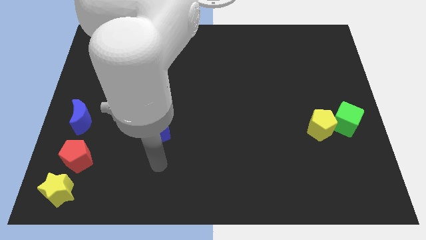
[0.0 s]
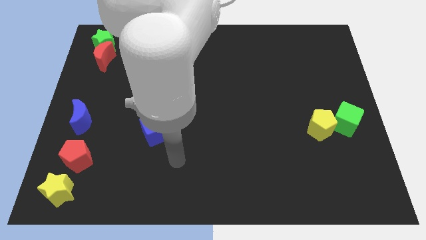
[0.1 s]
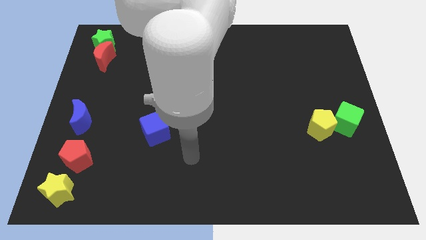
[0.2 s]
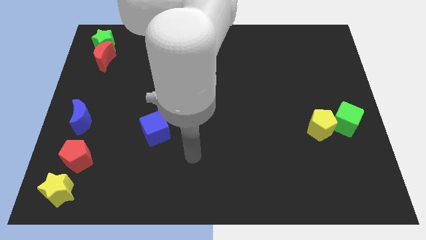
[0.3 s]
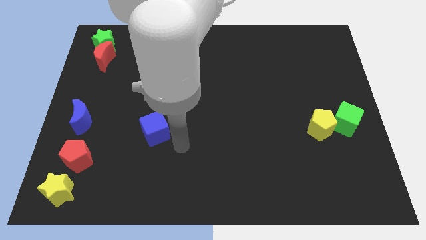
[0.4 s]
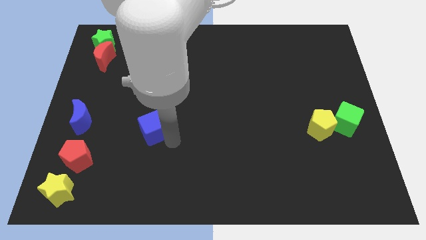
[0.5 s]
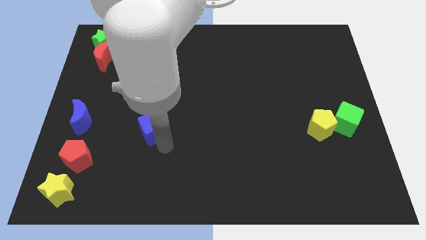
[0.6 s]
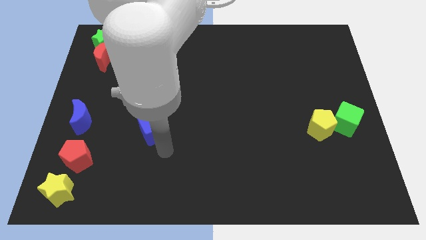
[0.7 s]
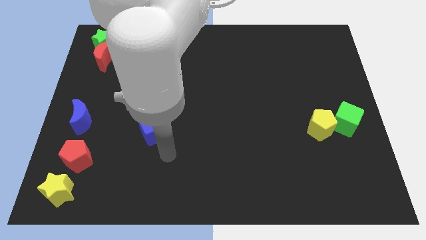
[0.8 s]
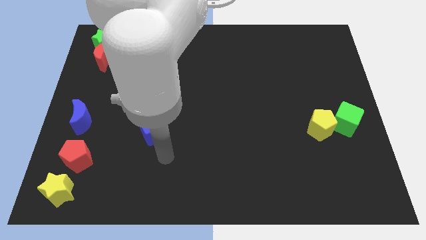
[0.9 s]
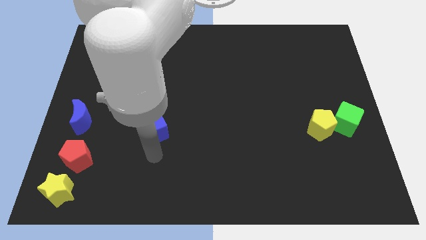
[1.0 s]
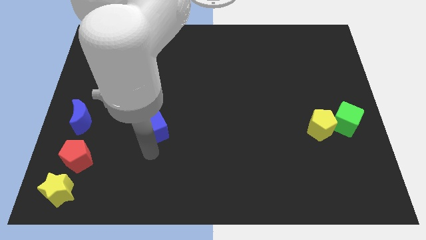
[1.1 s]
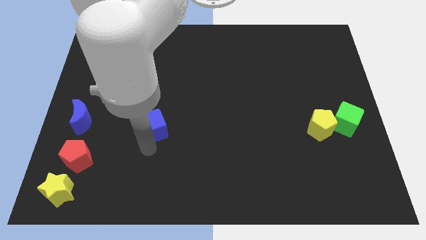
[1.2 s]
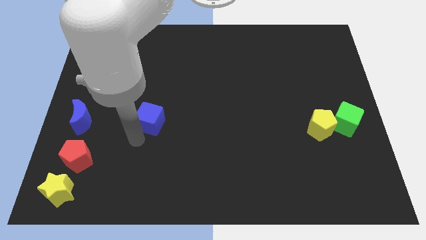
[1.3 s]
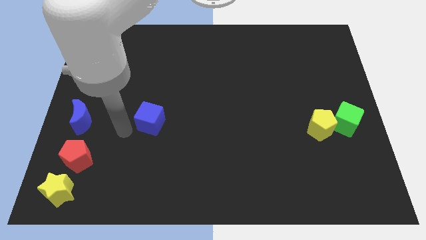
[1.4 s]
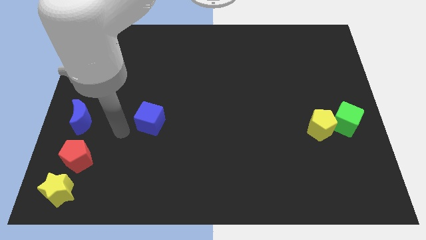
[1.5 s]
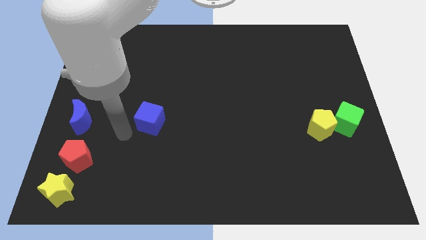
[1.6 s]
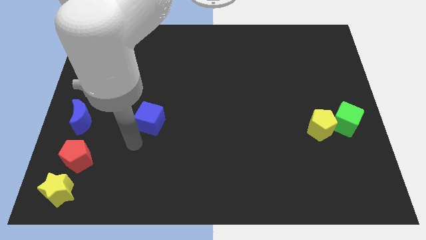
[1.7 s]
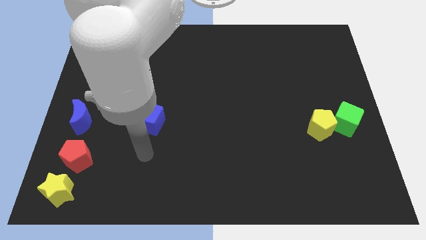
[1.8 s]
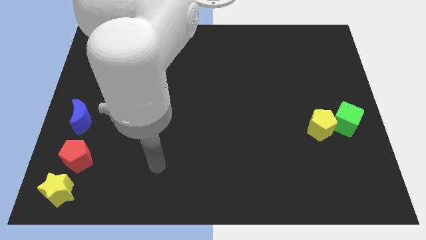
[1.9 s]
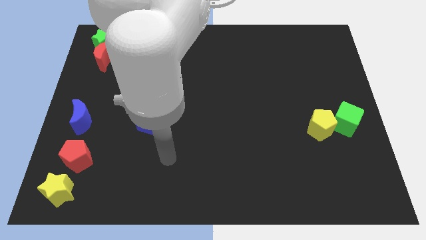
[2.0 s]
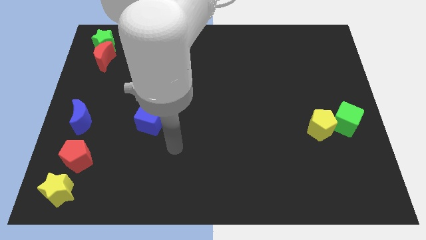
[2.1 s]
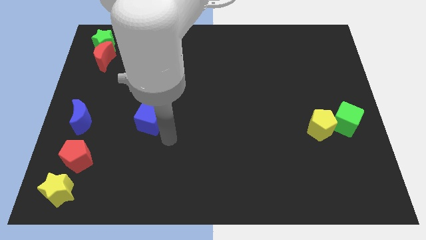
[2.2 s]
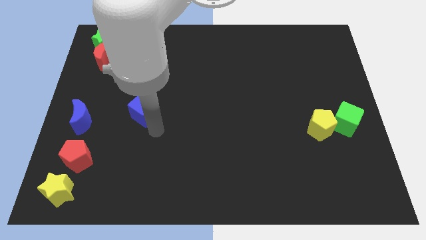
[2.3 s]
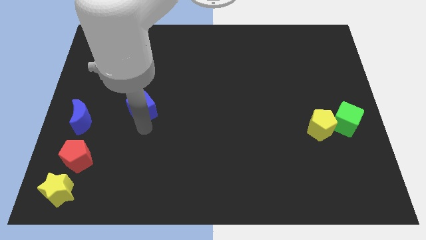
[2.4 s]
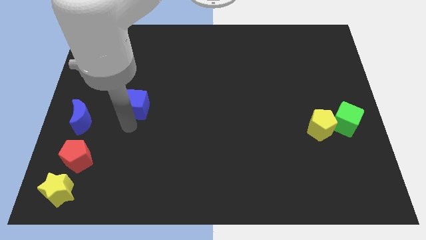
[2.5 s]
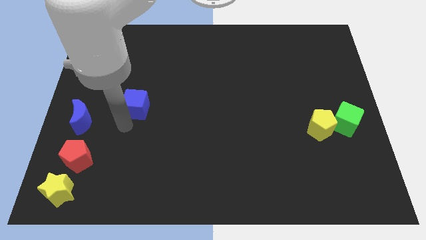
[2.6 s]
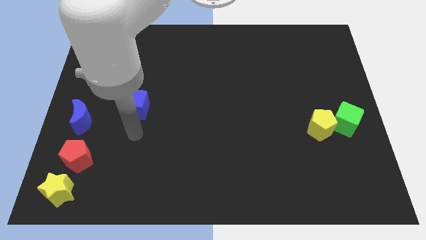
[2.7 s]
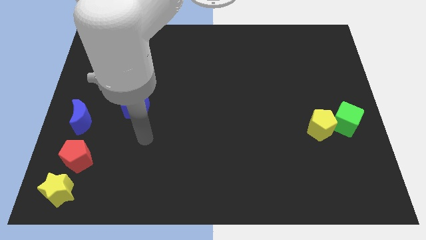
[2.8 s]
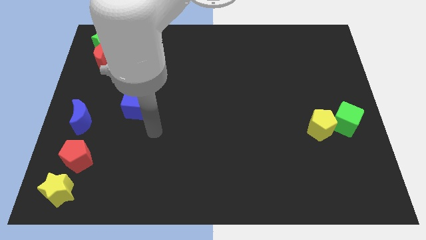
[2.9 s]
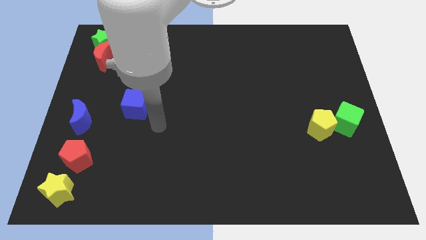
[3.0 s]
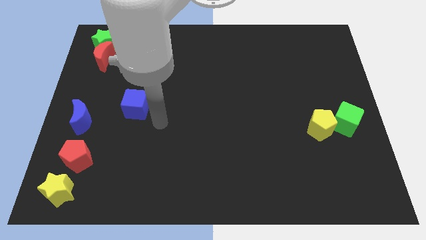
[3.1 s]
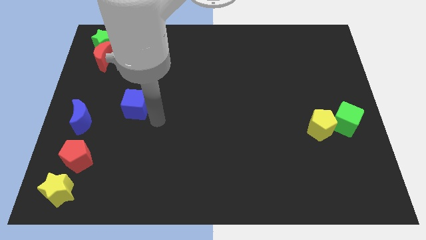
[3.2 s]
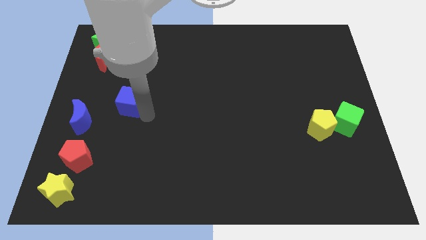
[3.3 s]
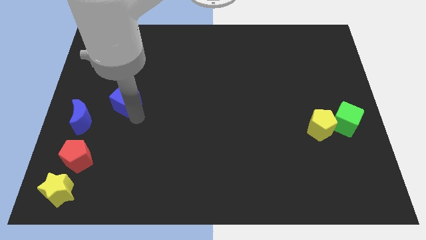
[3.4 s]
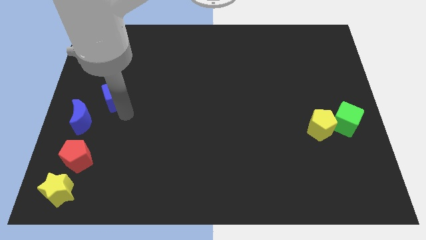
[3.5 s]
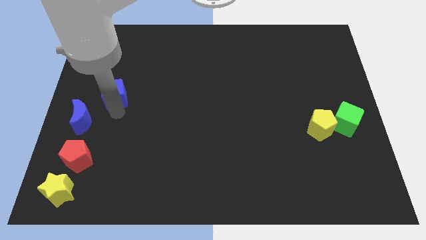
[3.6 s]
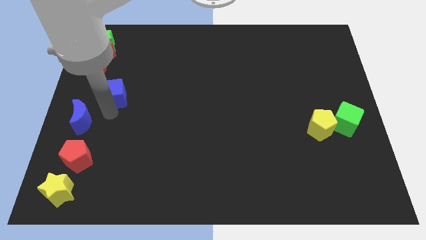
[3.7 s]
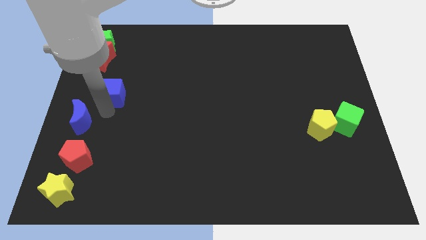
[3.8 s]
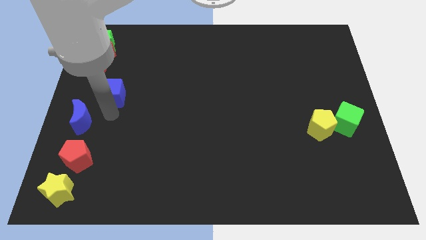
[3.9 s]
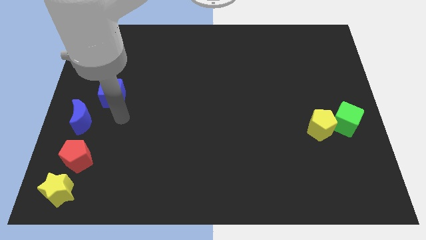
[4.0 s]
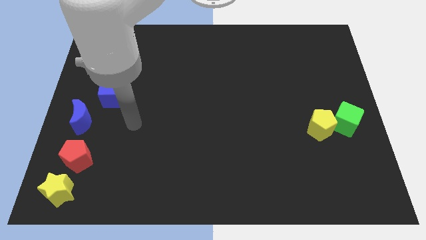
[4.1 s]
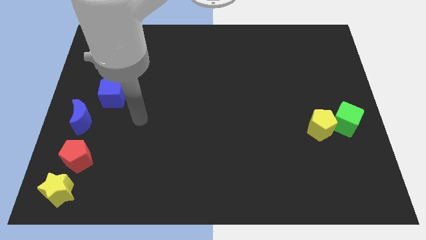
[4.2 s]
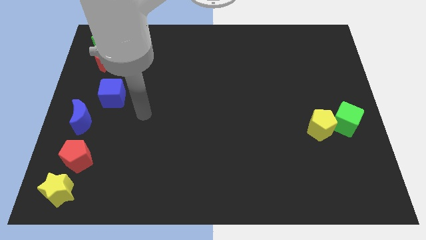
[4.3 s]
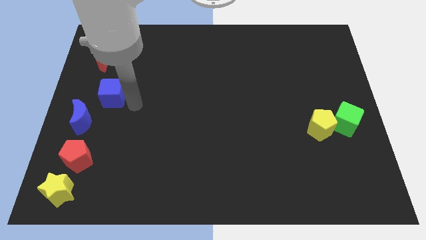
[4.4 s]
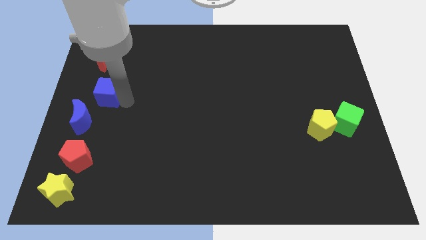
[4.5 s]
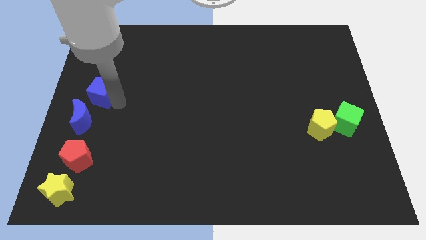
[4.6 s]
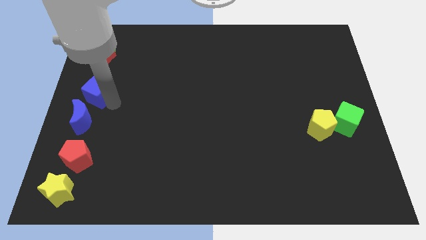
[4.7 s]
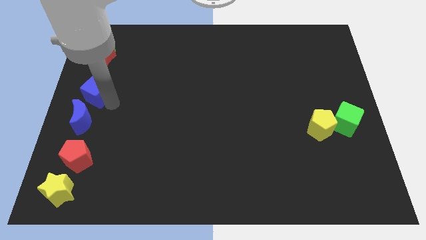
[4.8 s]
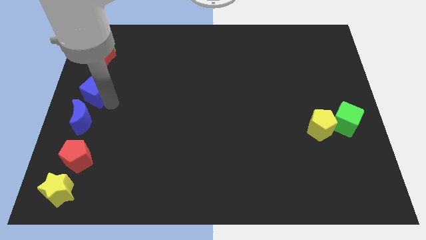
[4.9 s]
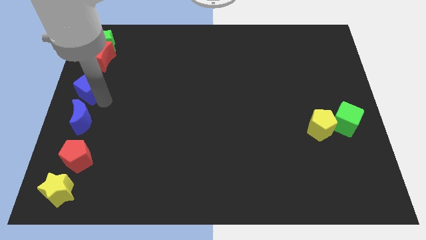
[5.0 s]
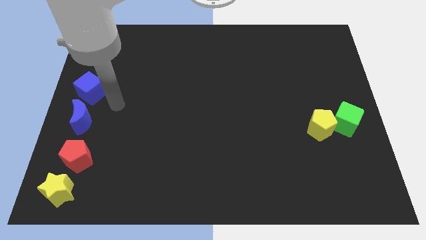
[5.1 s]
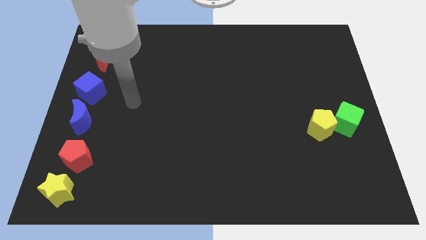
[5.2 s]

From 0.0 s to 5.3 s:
place the blue cube in between the red moon and blue moon

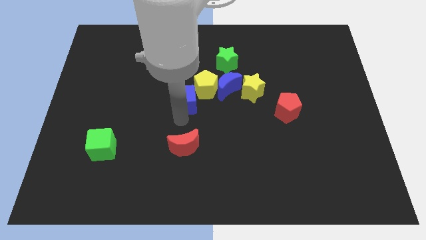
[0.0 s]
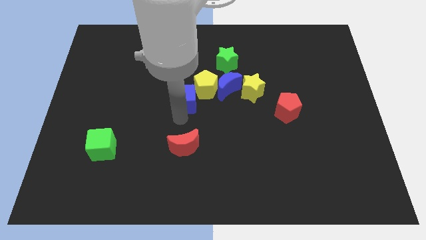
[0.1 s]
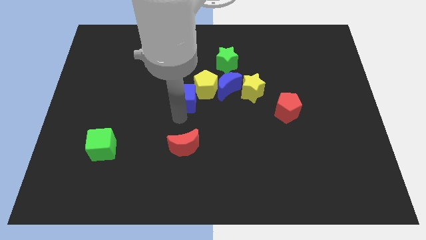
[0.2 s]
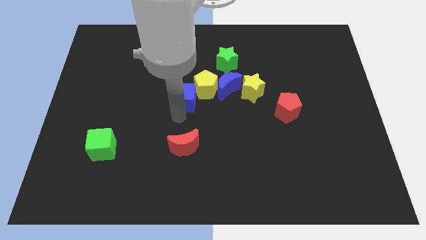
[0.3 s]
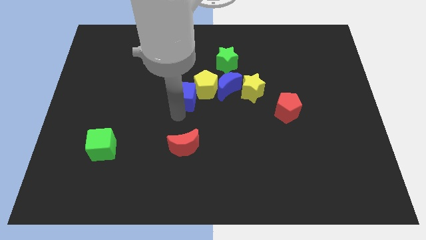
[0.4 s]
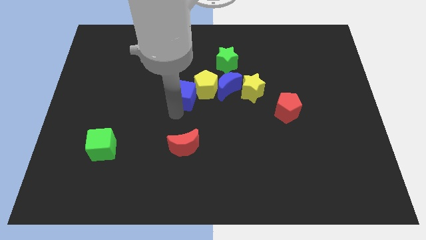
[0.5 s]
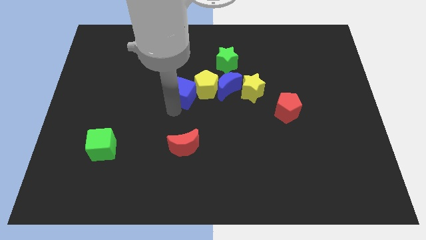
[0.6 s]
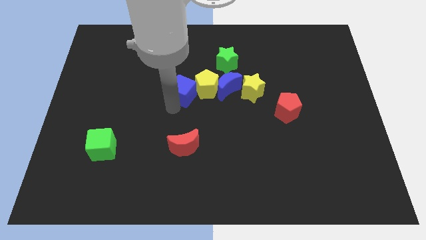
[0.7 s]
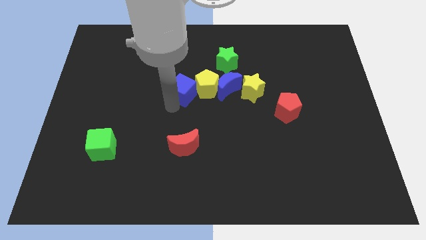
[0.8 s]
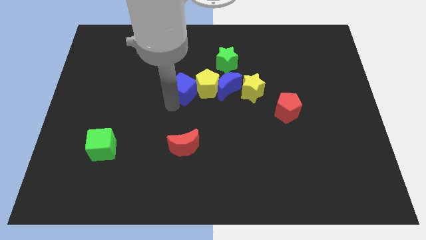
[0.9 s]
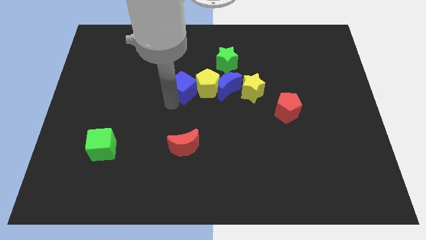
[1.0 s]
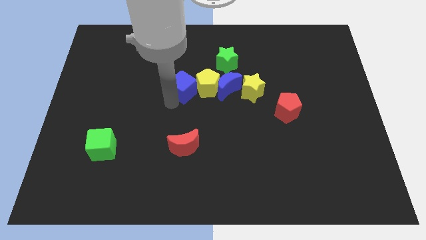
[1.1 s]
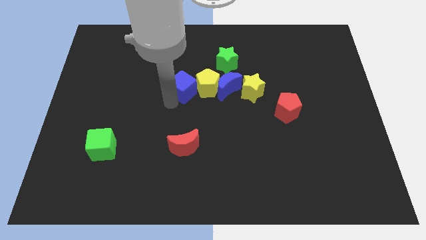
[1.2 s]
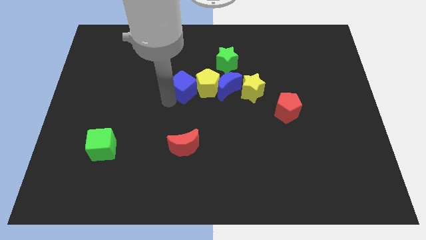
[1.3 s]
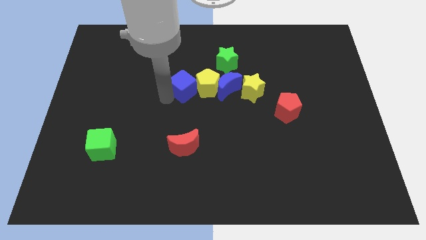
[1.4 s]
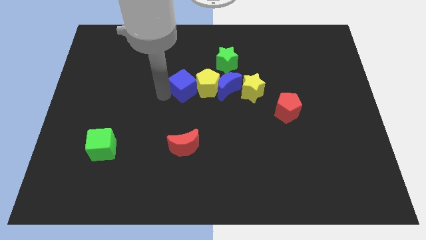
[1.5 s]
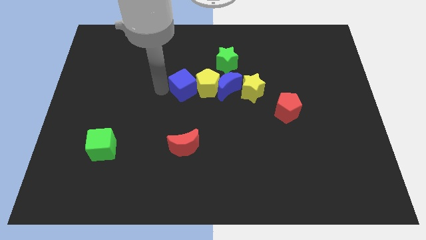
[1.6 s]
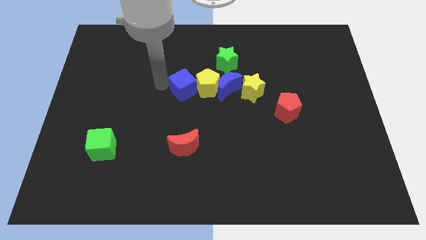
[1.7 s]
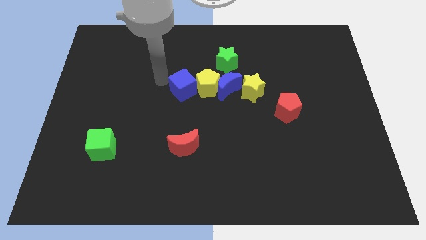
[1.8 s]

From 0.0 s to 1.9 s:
move the blue cube towards the left side of the yellow pentagon

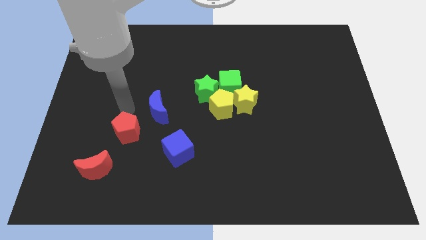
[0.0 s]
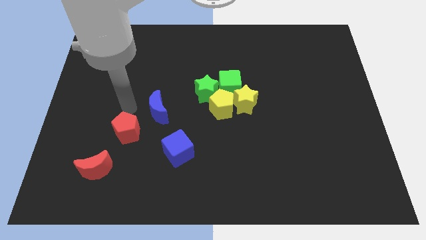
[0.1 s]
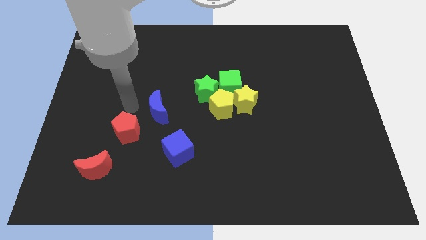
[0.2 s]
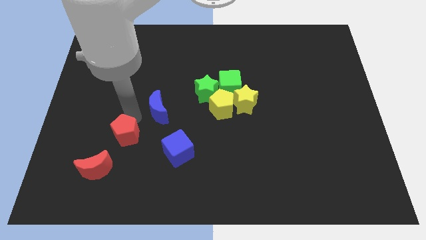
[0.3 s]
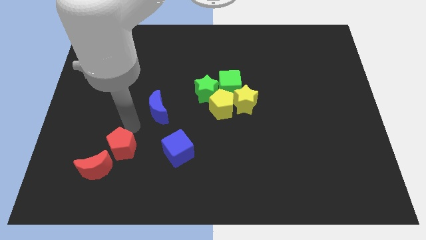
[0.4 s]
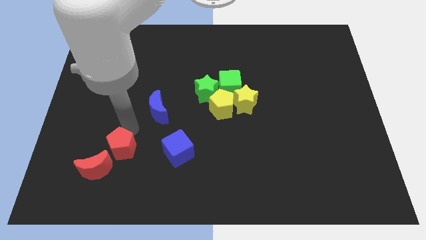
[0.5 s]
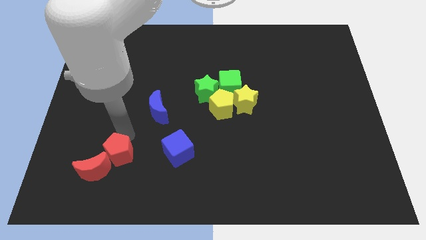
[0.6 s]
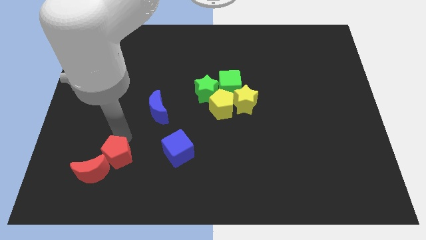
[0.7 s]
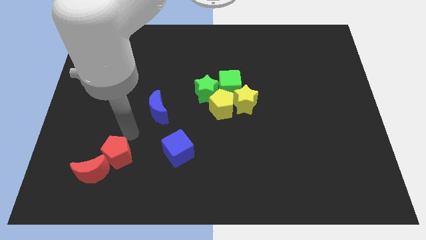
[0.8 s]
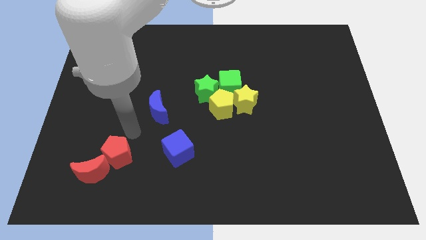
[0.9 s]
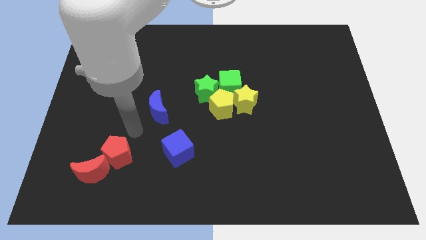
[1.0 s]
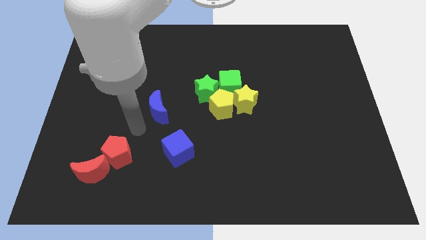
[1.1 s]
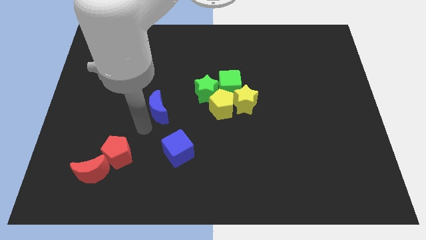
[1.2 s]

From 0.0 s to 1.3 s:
push the red pentagon to the right of the red crescent

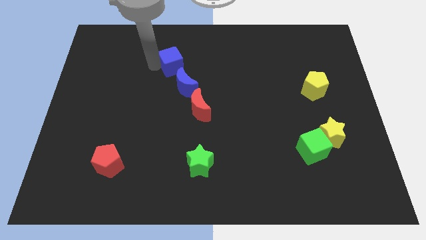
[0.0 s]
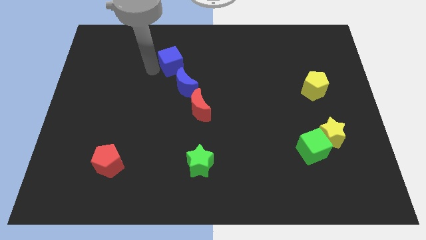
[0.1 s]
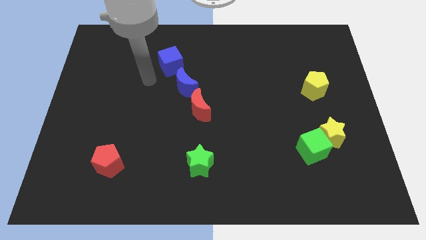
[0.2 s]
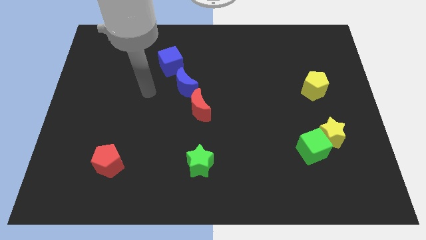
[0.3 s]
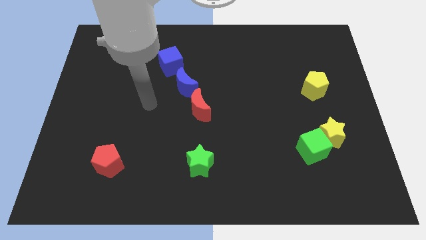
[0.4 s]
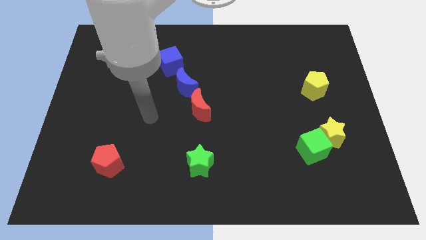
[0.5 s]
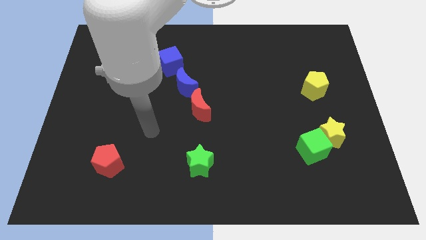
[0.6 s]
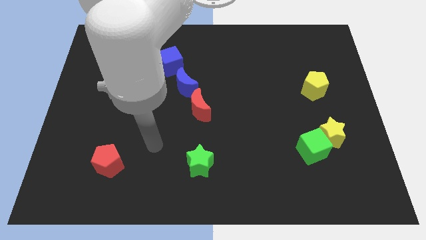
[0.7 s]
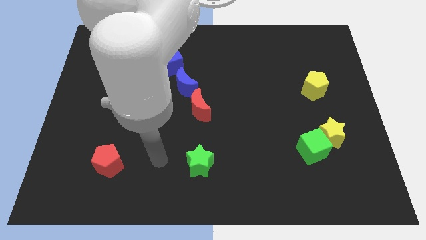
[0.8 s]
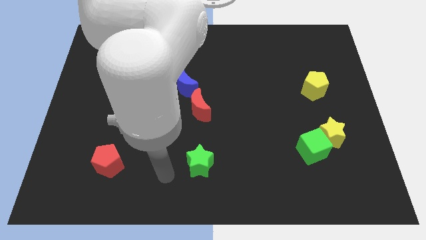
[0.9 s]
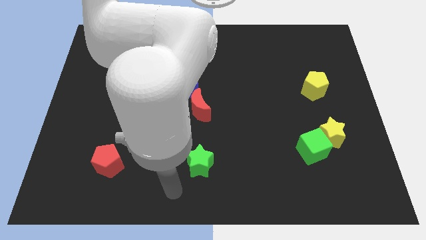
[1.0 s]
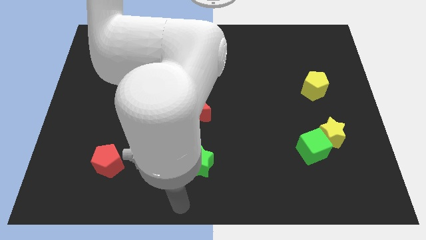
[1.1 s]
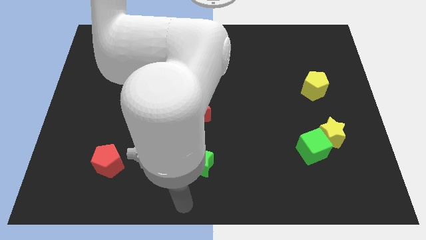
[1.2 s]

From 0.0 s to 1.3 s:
move your arm at the bottom center
